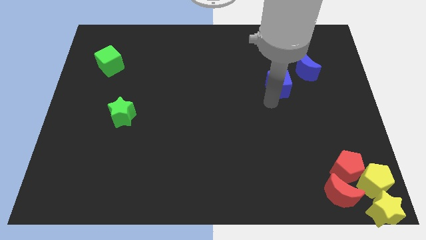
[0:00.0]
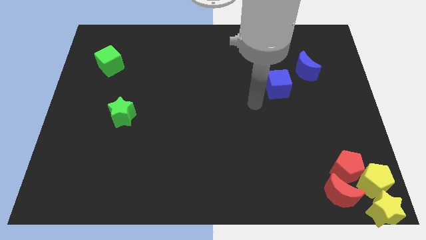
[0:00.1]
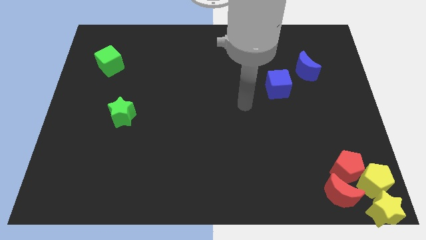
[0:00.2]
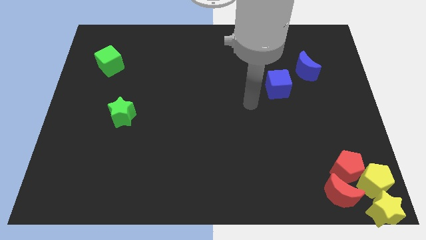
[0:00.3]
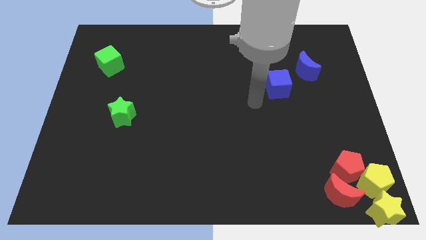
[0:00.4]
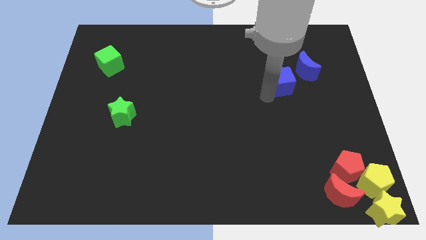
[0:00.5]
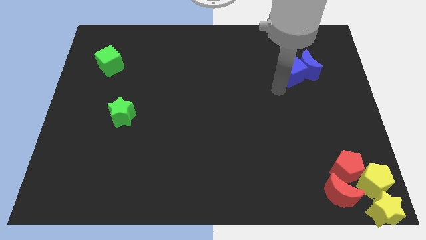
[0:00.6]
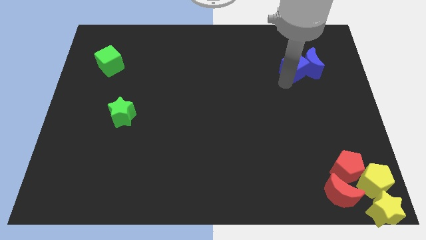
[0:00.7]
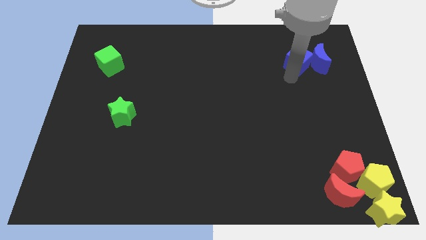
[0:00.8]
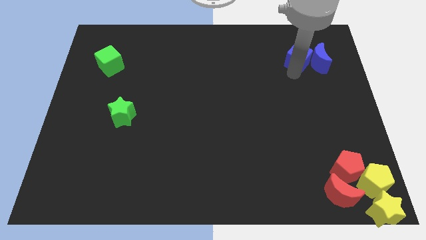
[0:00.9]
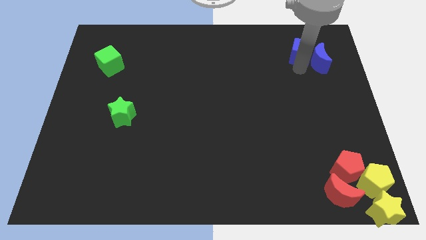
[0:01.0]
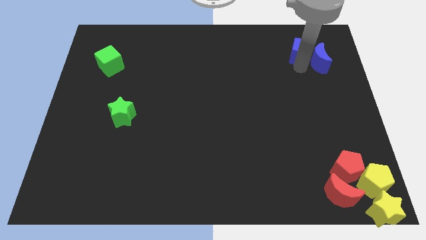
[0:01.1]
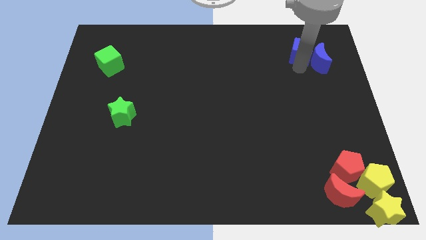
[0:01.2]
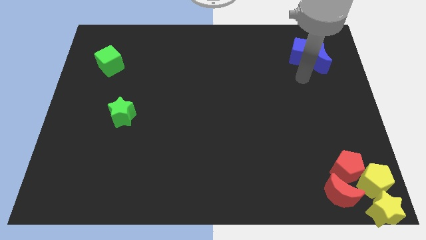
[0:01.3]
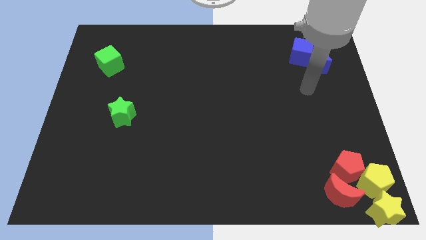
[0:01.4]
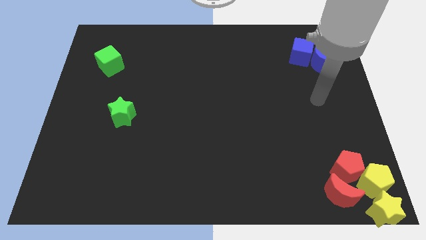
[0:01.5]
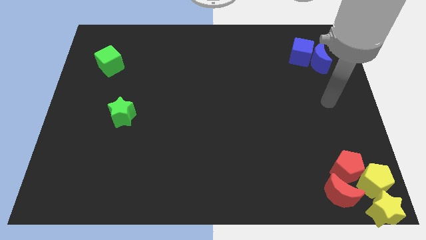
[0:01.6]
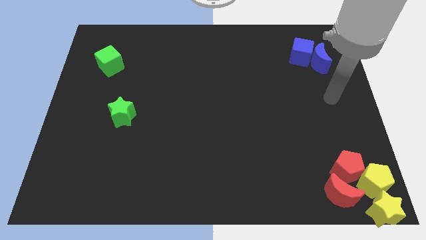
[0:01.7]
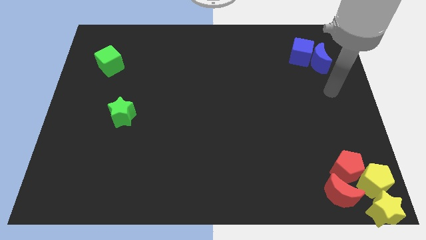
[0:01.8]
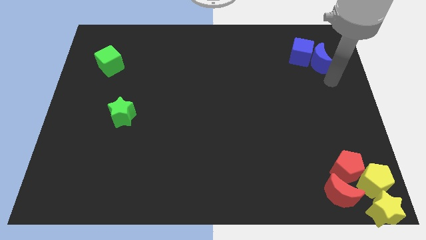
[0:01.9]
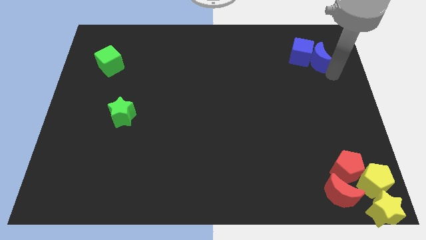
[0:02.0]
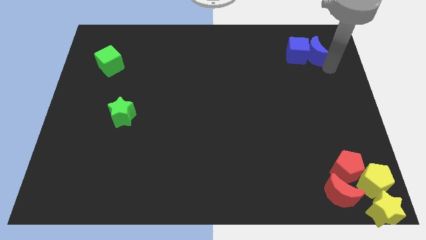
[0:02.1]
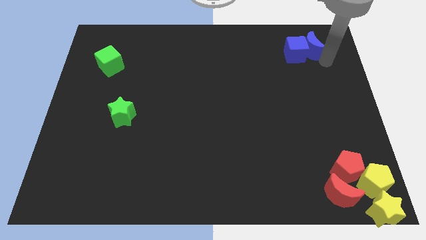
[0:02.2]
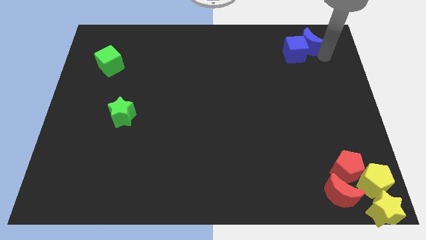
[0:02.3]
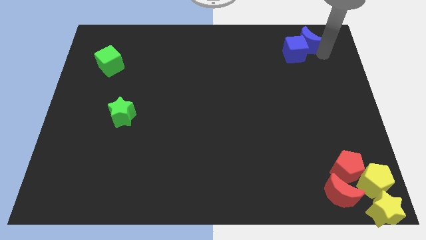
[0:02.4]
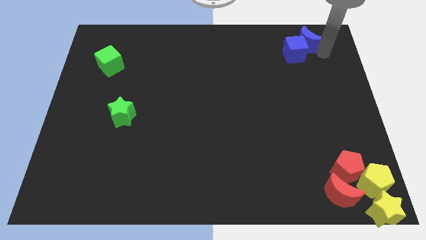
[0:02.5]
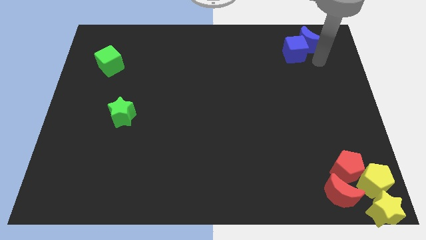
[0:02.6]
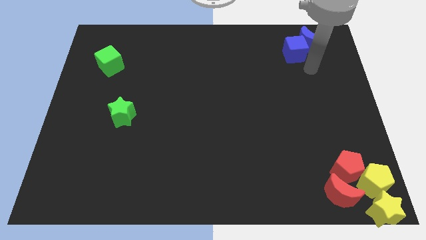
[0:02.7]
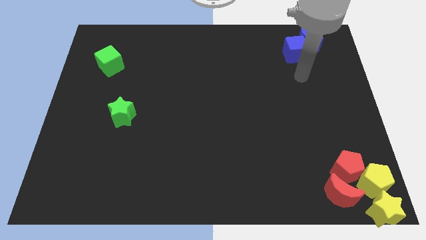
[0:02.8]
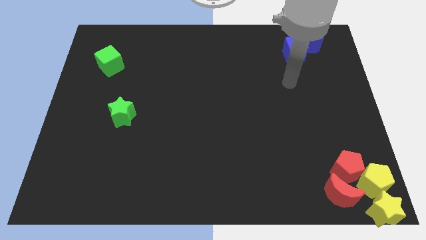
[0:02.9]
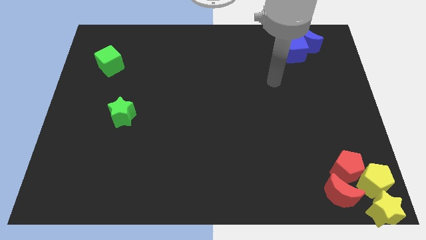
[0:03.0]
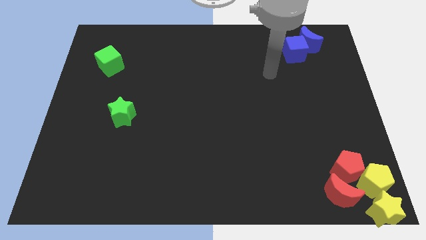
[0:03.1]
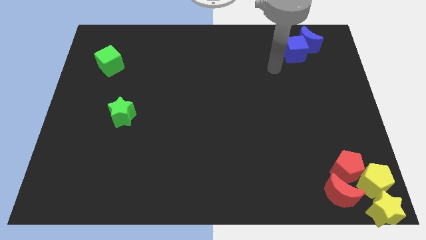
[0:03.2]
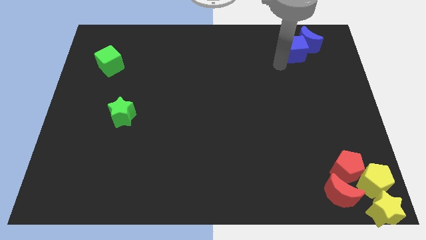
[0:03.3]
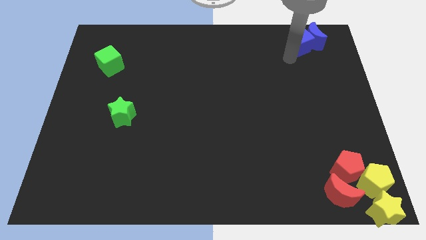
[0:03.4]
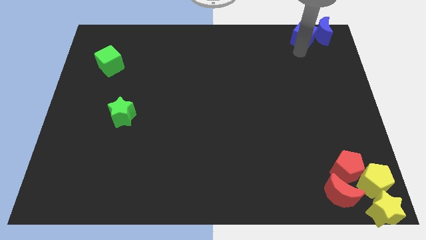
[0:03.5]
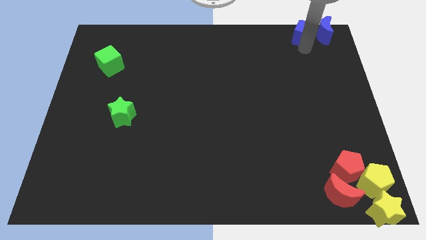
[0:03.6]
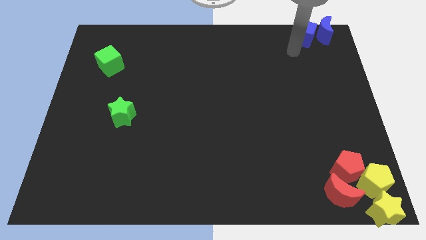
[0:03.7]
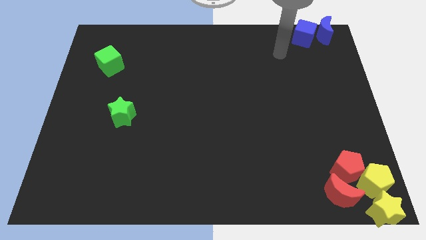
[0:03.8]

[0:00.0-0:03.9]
push the blue blocks to the top right side

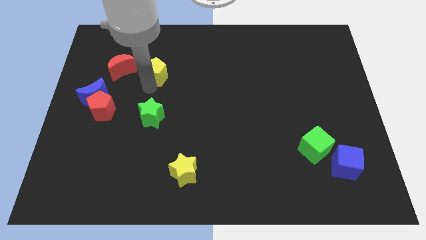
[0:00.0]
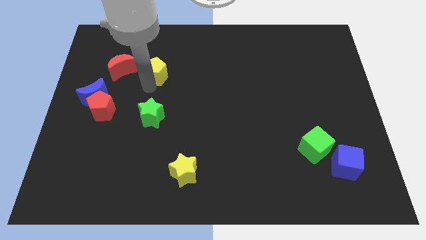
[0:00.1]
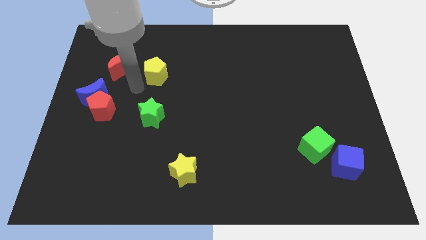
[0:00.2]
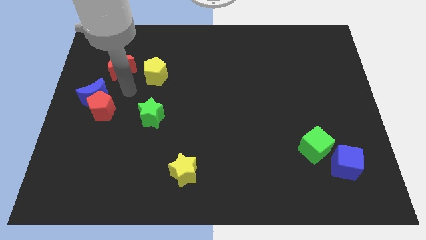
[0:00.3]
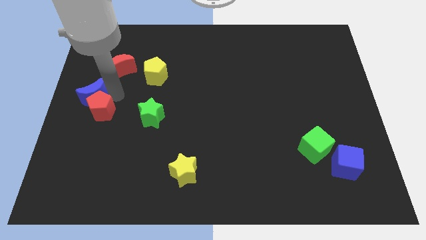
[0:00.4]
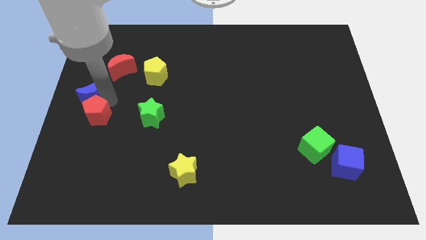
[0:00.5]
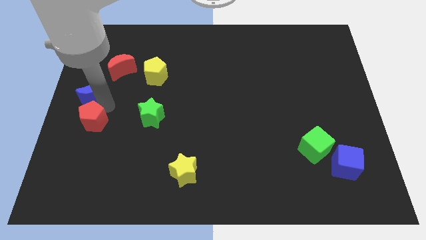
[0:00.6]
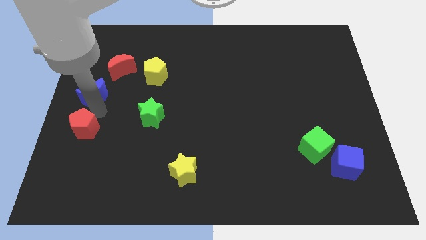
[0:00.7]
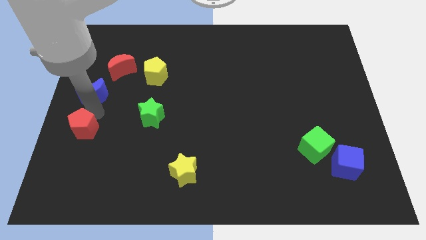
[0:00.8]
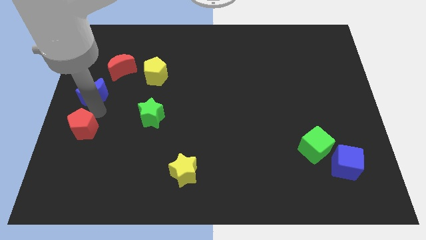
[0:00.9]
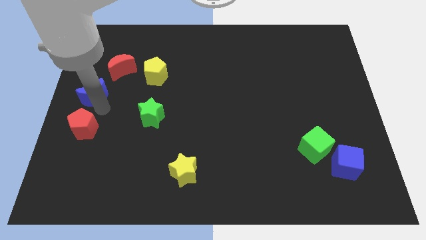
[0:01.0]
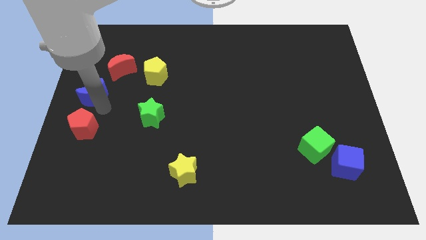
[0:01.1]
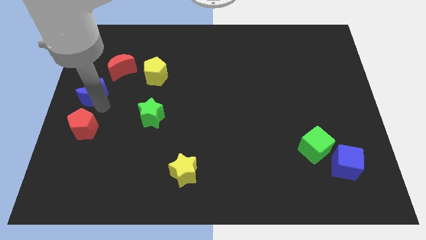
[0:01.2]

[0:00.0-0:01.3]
push the red pentagon towards the bottom side of the board

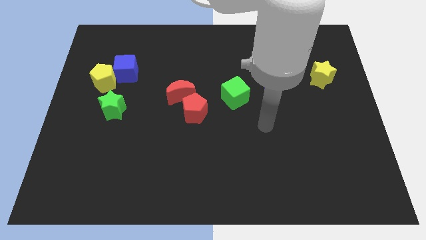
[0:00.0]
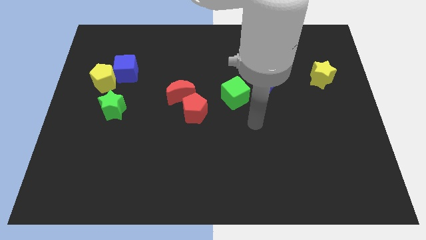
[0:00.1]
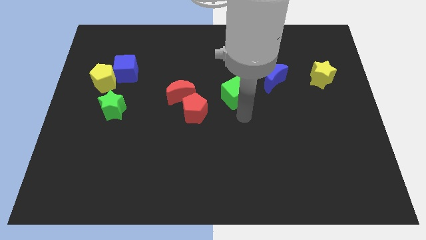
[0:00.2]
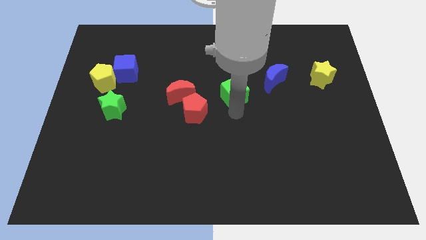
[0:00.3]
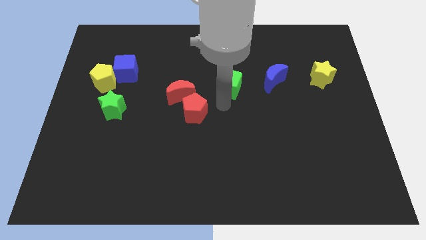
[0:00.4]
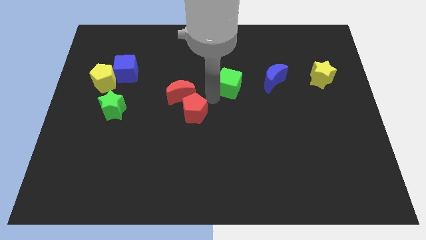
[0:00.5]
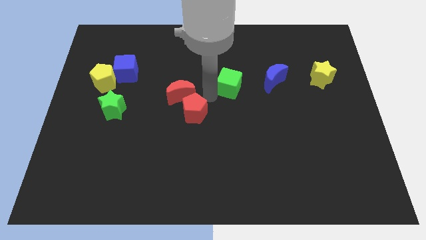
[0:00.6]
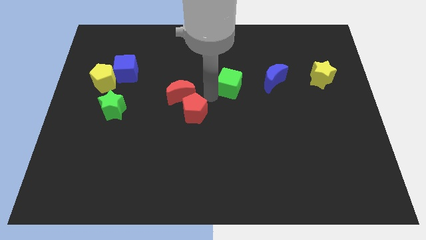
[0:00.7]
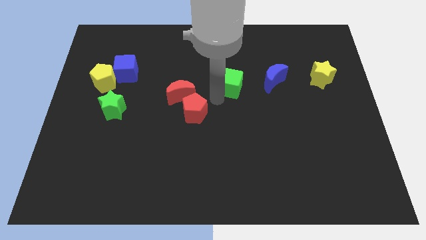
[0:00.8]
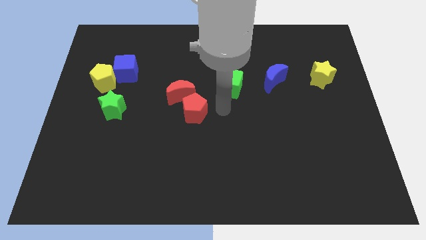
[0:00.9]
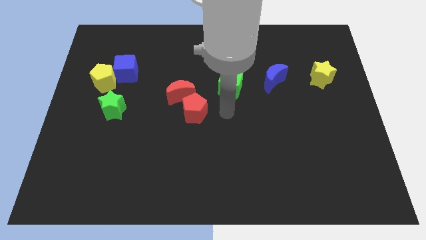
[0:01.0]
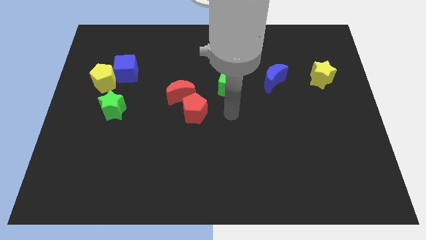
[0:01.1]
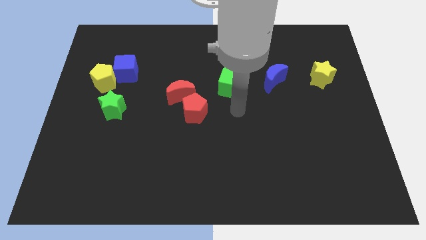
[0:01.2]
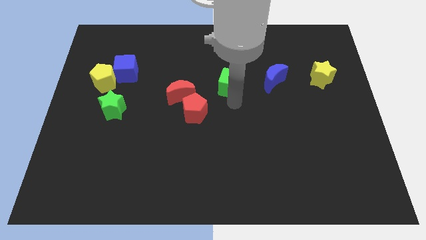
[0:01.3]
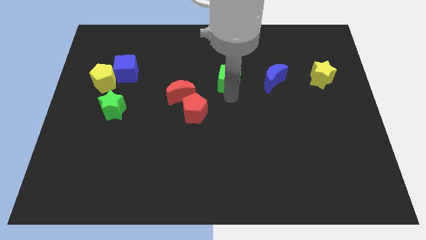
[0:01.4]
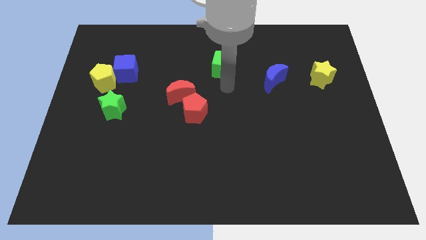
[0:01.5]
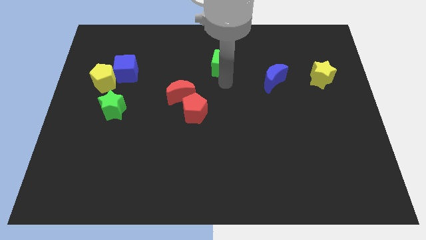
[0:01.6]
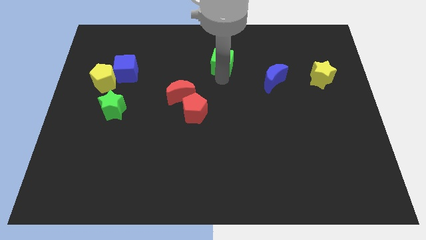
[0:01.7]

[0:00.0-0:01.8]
move the green cube towards the top side

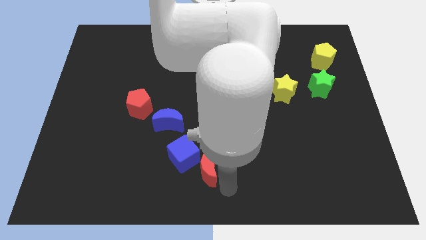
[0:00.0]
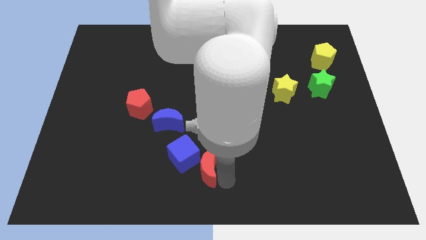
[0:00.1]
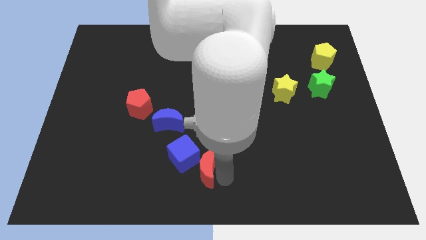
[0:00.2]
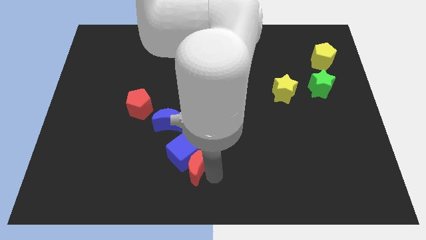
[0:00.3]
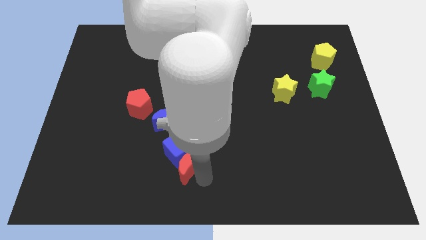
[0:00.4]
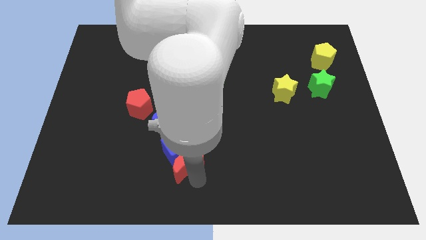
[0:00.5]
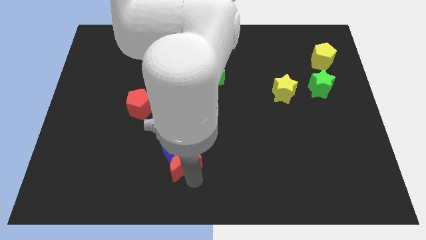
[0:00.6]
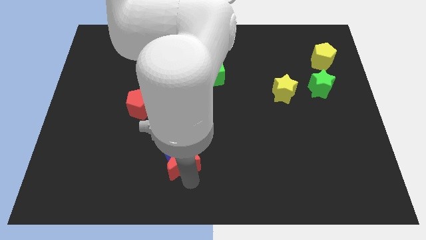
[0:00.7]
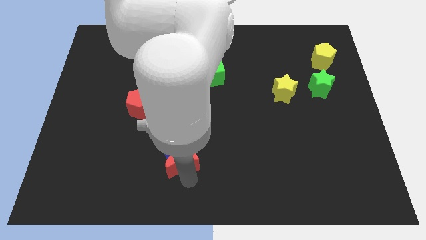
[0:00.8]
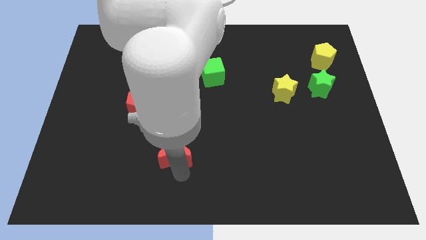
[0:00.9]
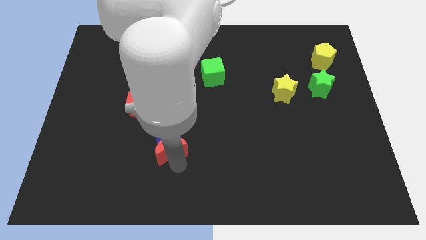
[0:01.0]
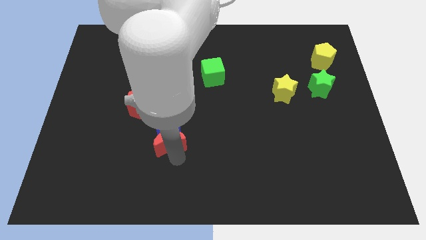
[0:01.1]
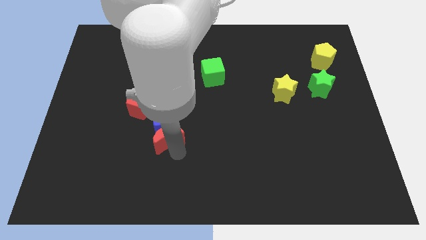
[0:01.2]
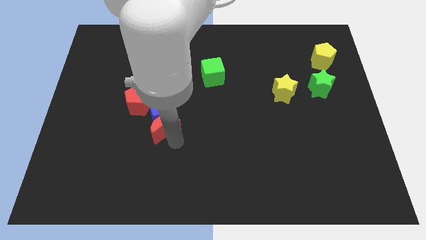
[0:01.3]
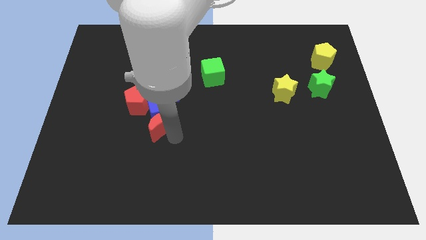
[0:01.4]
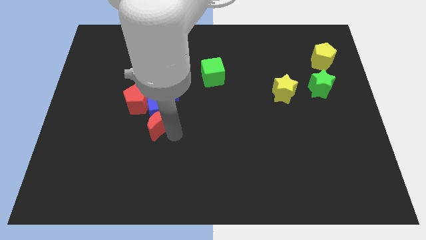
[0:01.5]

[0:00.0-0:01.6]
drag the red crescent and blue cube to the upside

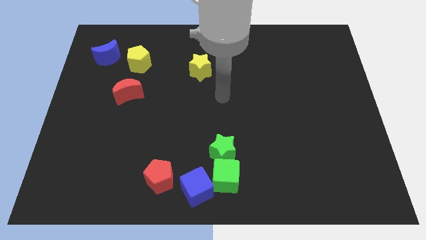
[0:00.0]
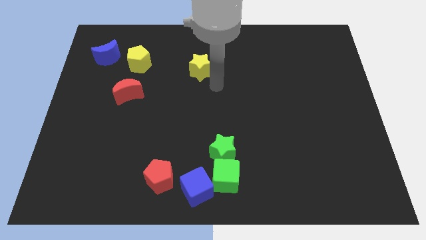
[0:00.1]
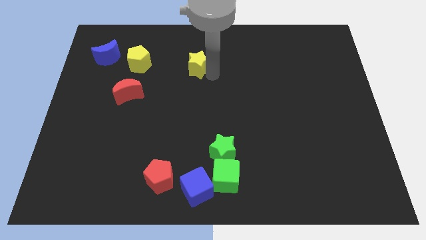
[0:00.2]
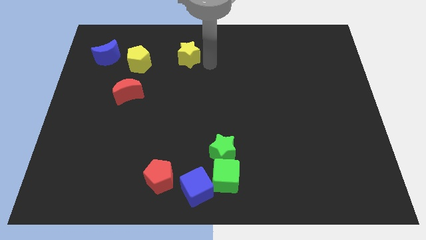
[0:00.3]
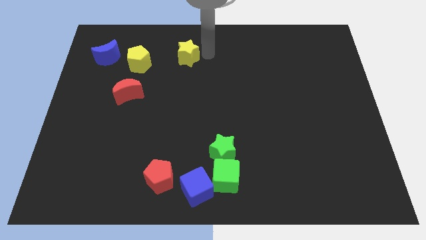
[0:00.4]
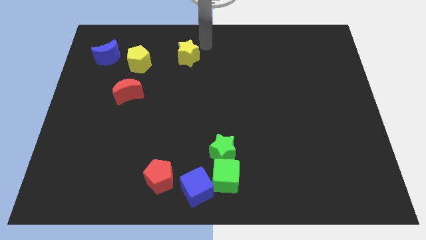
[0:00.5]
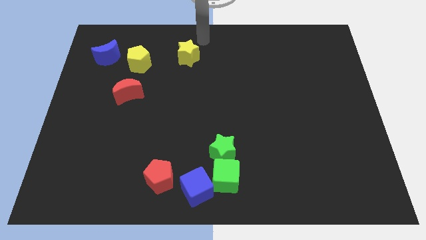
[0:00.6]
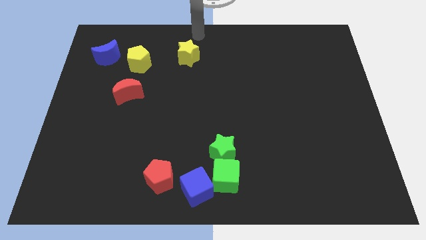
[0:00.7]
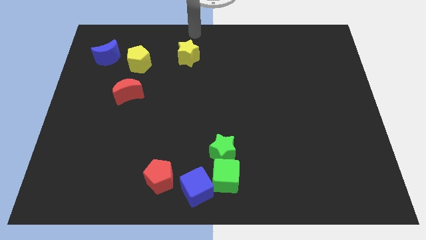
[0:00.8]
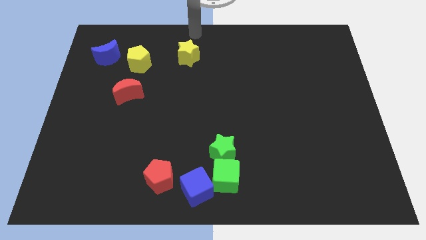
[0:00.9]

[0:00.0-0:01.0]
move the yellow star parallel to the yellow pentagon
